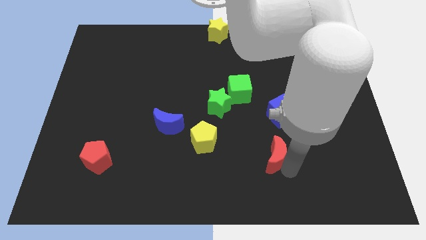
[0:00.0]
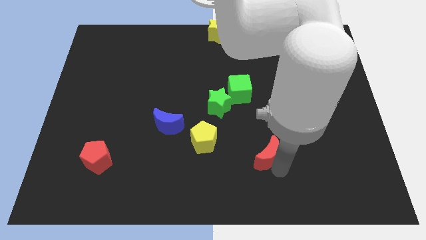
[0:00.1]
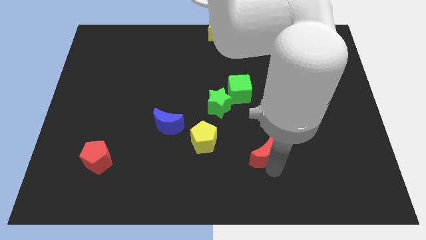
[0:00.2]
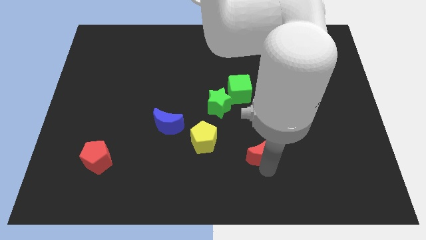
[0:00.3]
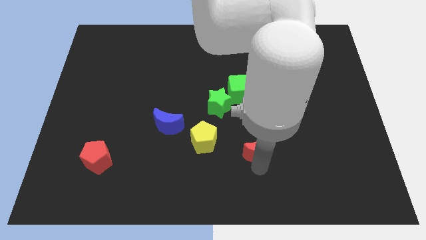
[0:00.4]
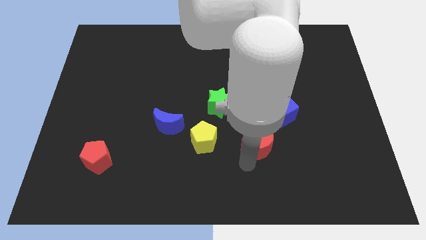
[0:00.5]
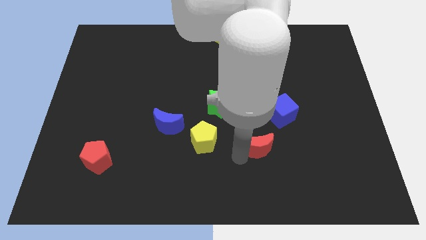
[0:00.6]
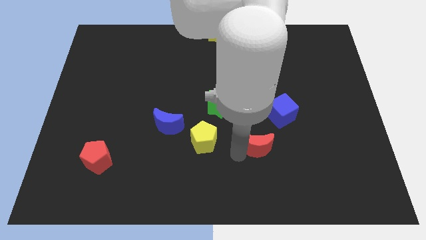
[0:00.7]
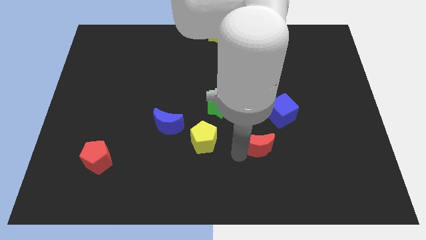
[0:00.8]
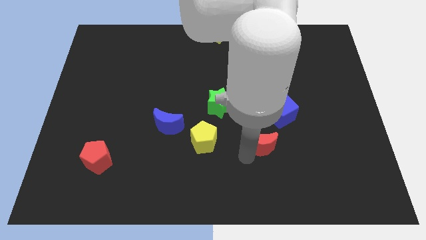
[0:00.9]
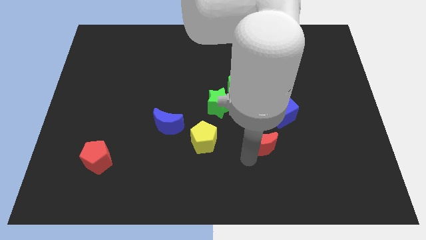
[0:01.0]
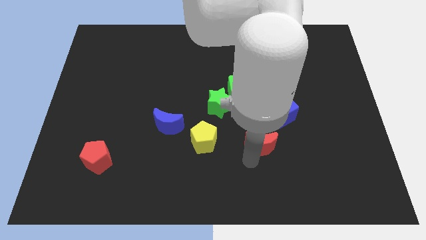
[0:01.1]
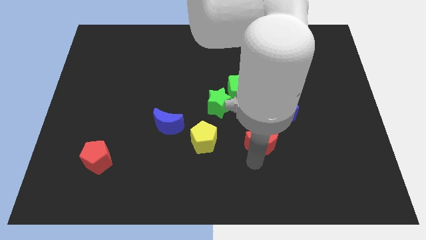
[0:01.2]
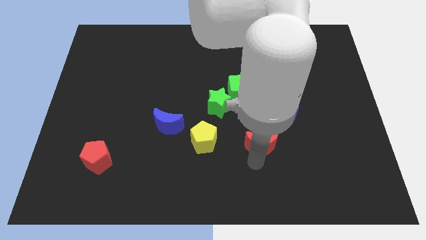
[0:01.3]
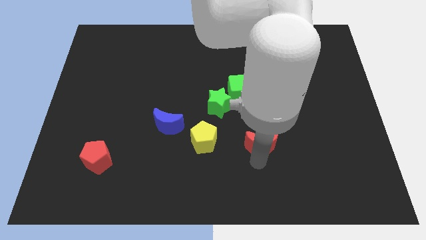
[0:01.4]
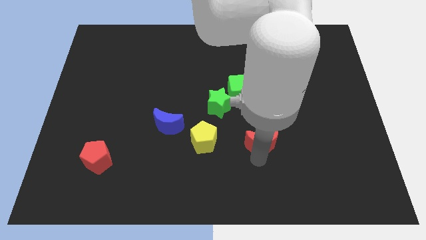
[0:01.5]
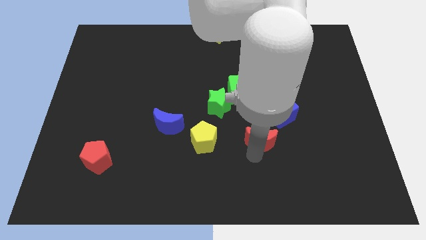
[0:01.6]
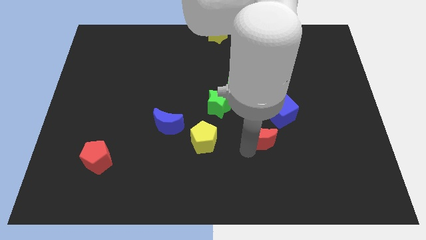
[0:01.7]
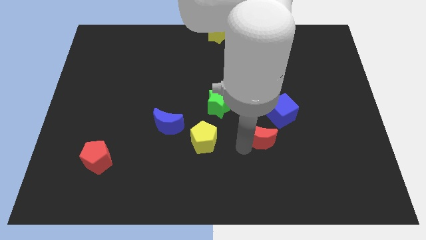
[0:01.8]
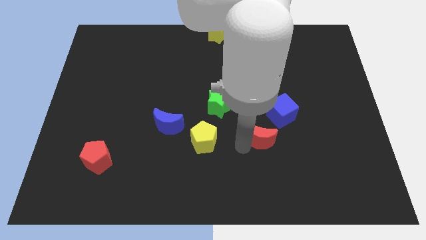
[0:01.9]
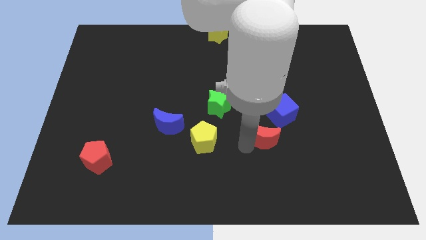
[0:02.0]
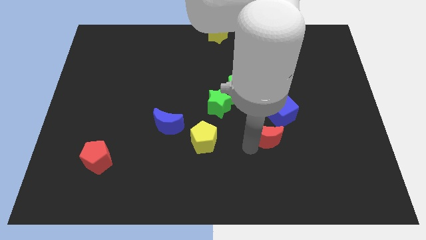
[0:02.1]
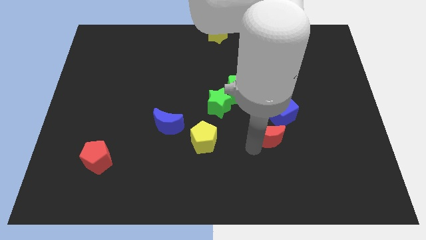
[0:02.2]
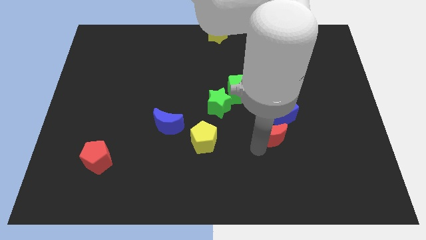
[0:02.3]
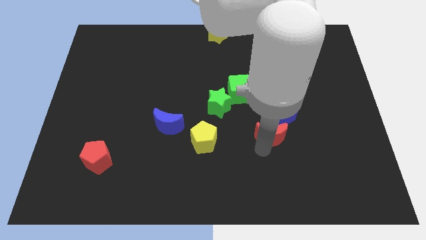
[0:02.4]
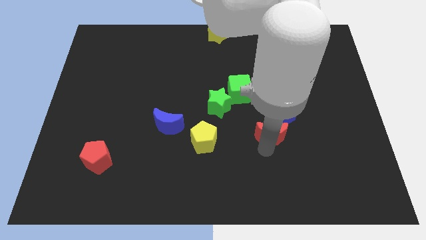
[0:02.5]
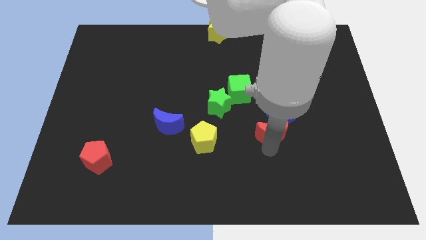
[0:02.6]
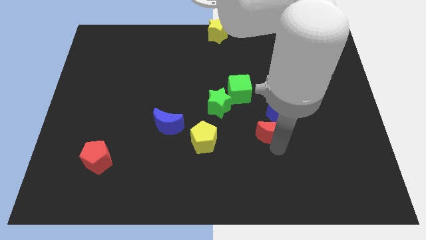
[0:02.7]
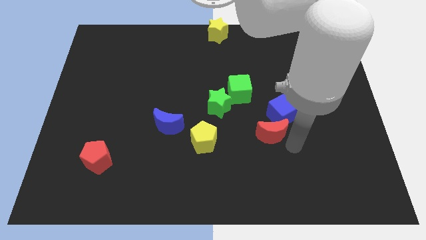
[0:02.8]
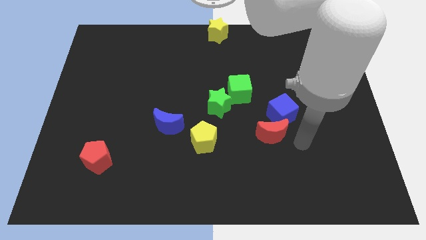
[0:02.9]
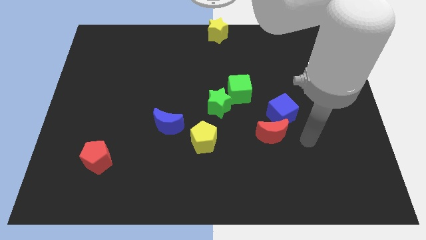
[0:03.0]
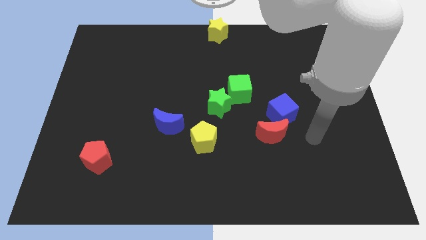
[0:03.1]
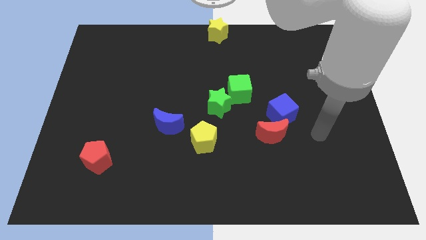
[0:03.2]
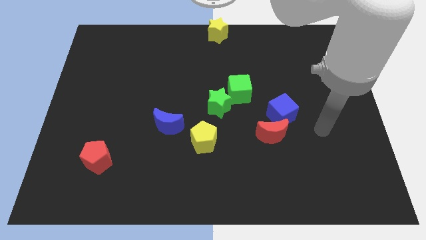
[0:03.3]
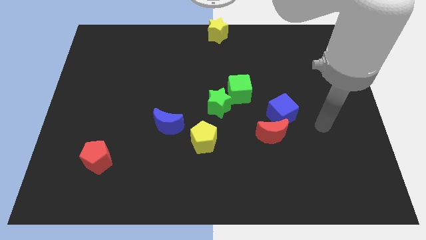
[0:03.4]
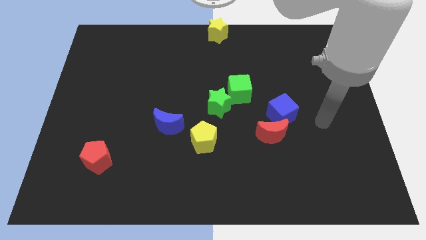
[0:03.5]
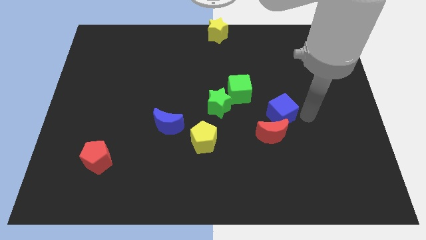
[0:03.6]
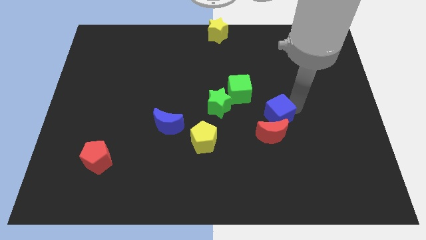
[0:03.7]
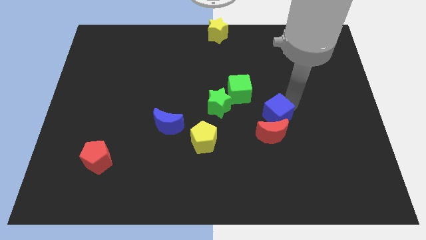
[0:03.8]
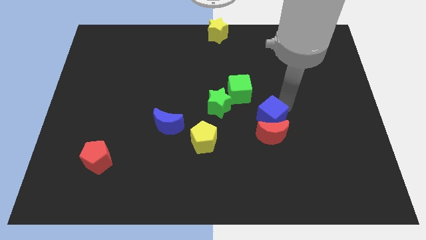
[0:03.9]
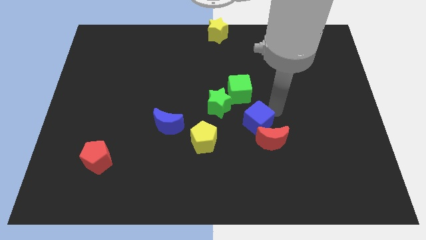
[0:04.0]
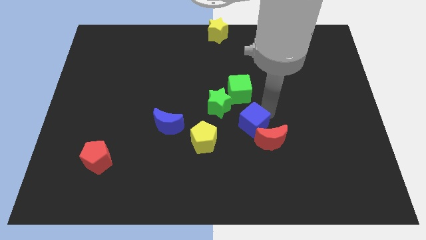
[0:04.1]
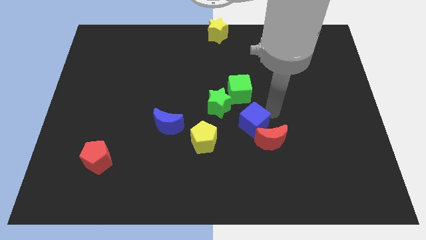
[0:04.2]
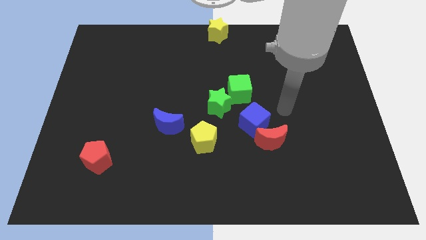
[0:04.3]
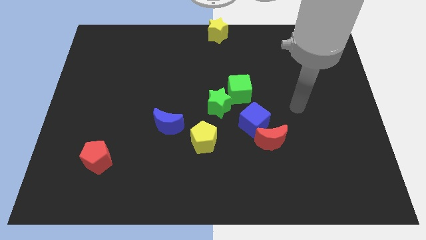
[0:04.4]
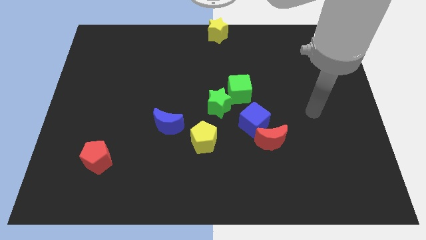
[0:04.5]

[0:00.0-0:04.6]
move the red moon close to blue cube

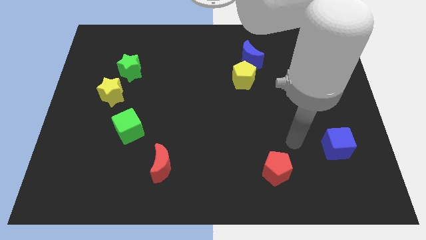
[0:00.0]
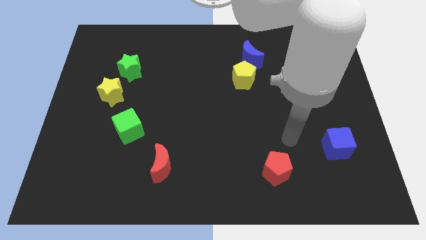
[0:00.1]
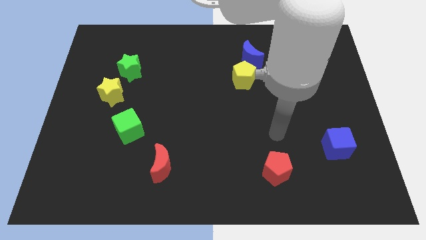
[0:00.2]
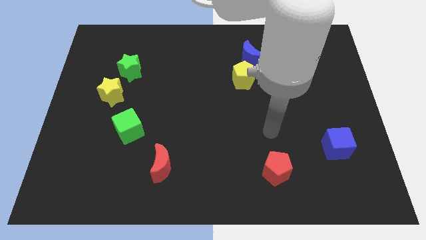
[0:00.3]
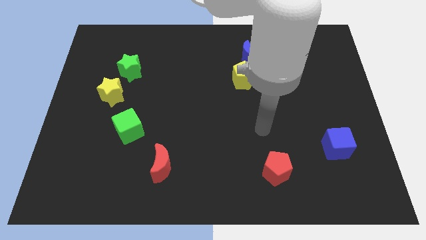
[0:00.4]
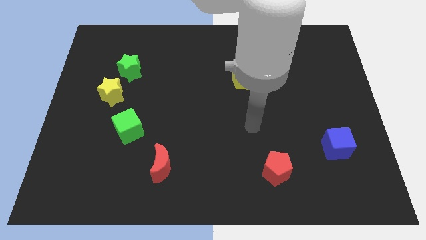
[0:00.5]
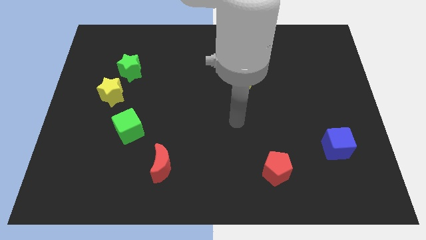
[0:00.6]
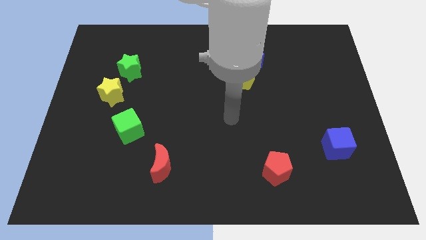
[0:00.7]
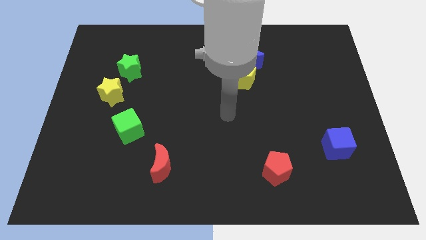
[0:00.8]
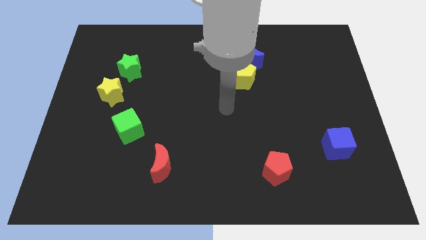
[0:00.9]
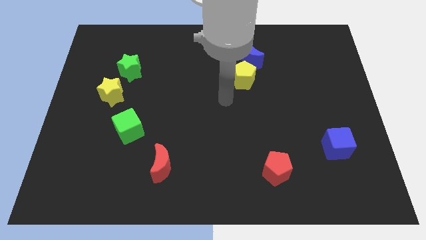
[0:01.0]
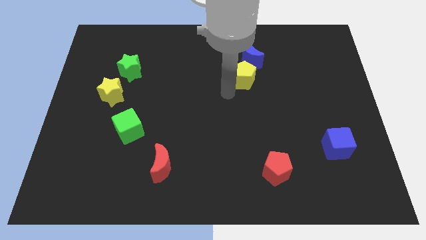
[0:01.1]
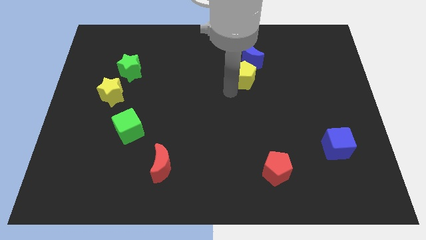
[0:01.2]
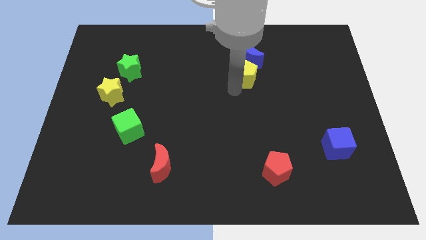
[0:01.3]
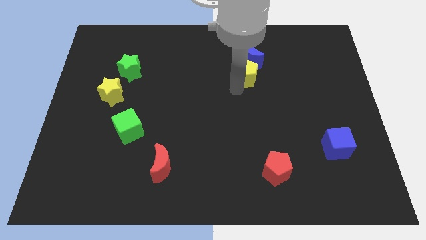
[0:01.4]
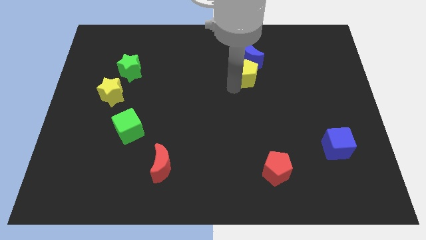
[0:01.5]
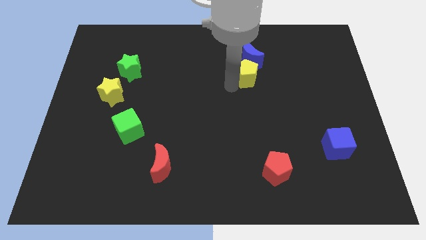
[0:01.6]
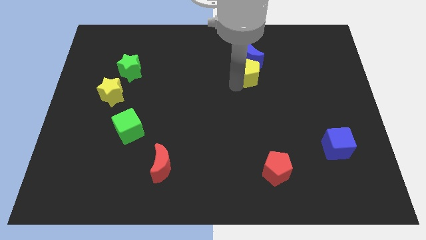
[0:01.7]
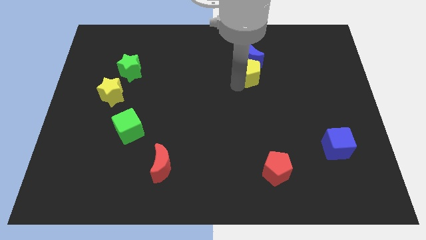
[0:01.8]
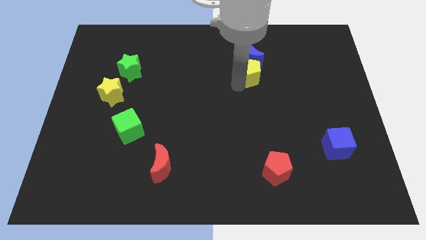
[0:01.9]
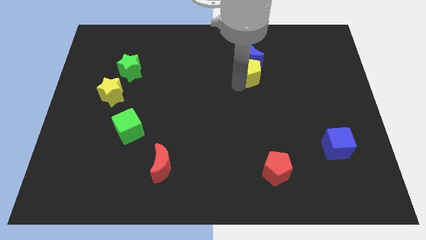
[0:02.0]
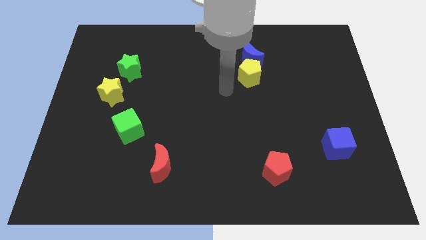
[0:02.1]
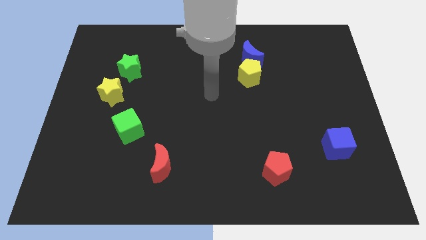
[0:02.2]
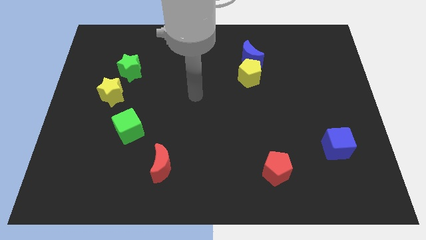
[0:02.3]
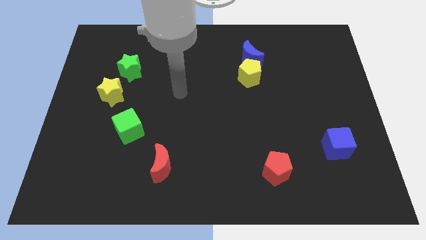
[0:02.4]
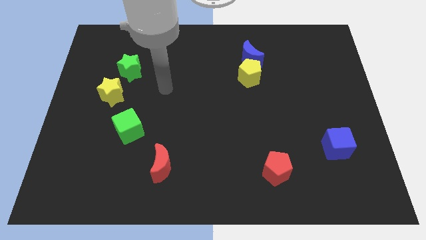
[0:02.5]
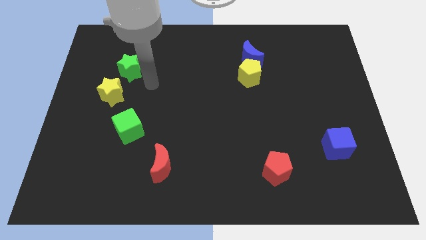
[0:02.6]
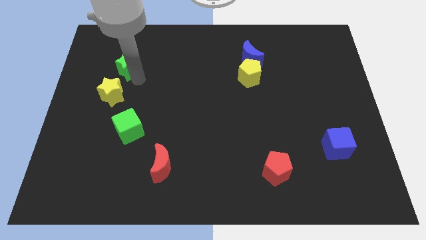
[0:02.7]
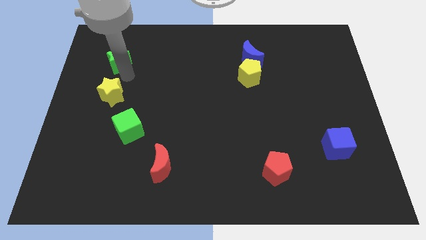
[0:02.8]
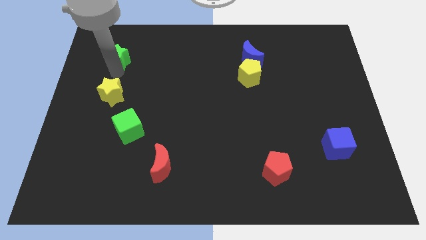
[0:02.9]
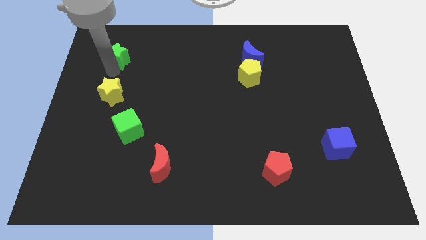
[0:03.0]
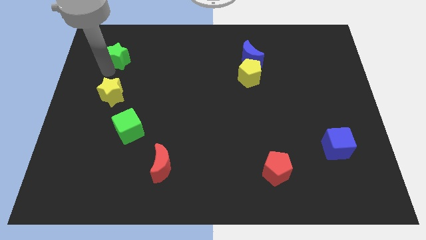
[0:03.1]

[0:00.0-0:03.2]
slightly push green star upwards

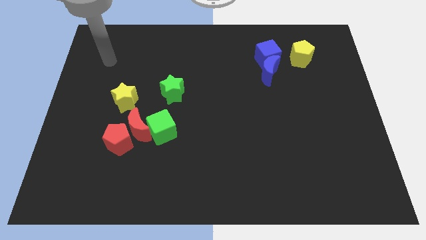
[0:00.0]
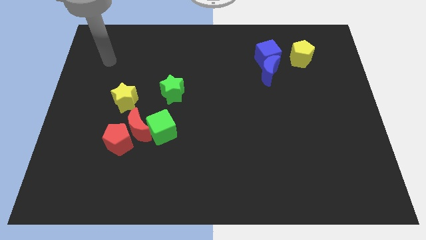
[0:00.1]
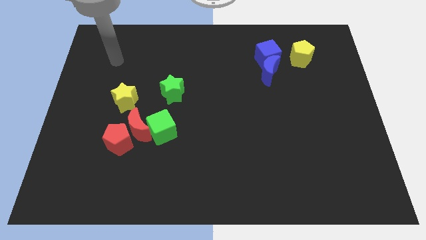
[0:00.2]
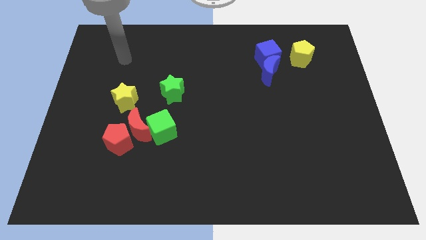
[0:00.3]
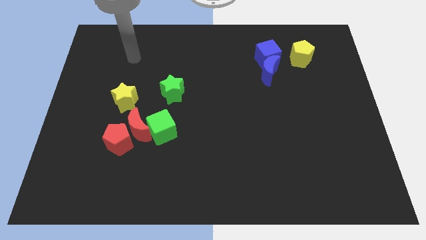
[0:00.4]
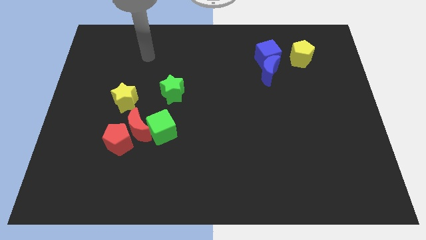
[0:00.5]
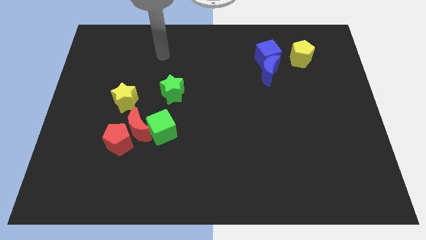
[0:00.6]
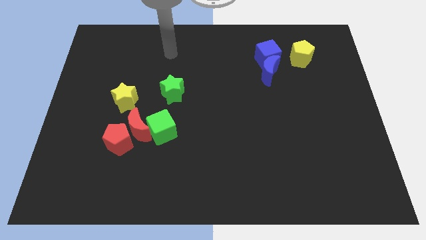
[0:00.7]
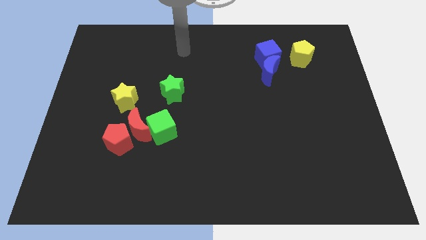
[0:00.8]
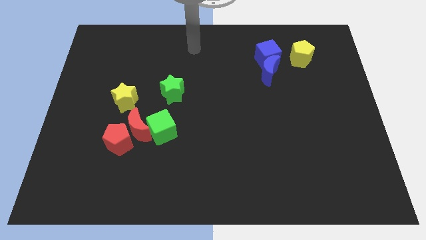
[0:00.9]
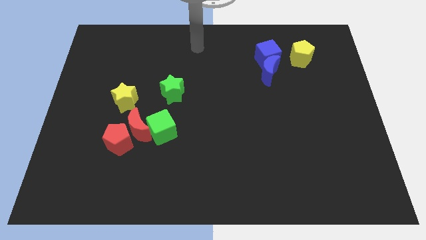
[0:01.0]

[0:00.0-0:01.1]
drag the pointer towards the top center of the board
